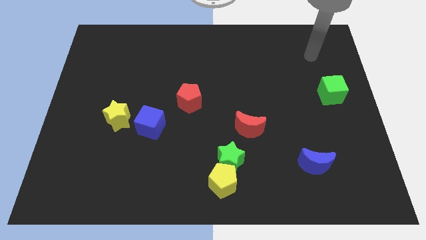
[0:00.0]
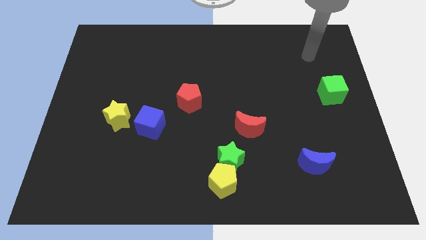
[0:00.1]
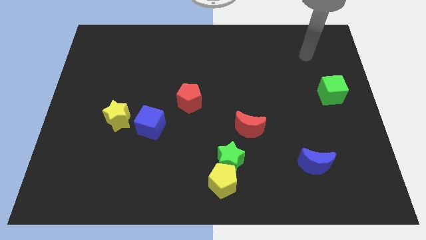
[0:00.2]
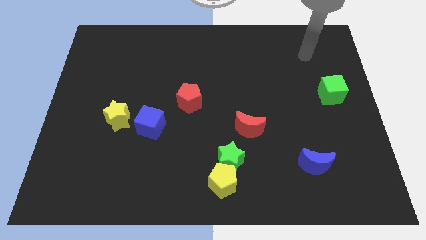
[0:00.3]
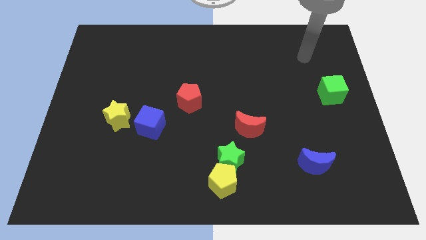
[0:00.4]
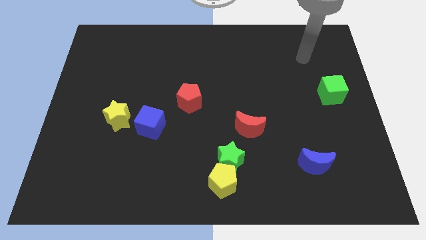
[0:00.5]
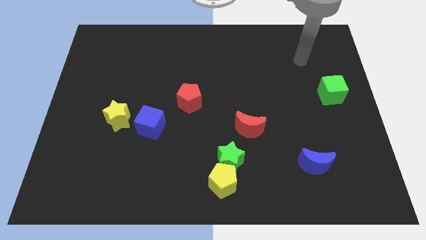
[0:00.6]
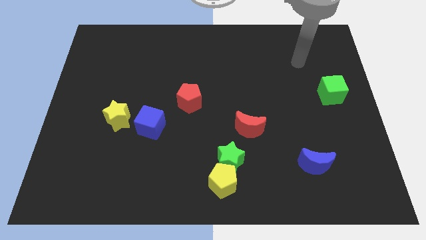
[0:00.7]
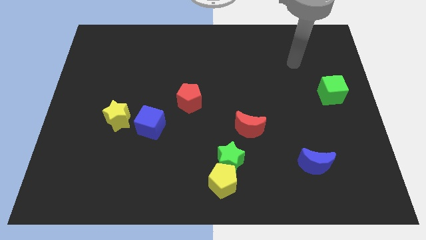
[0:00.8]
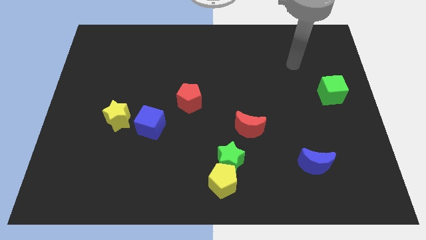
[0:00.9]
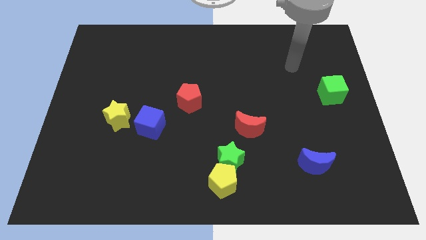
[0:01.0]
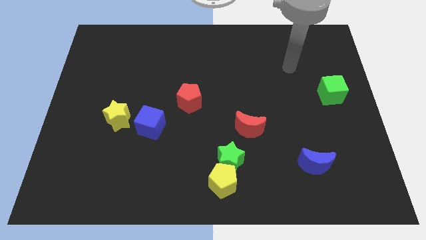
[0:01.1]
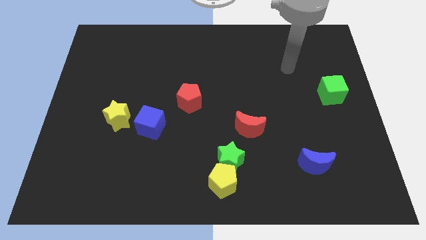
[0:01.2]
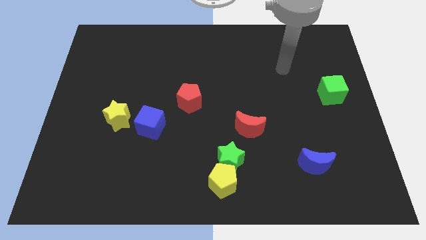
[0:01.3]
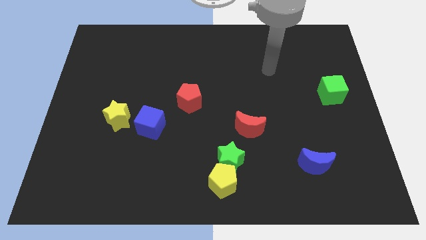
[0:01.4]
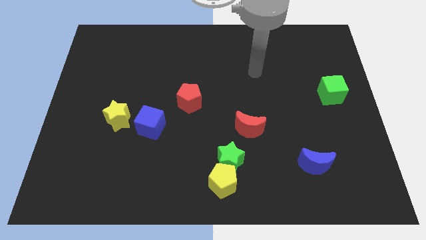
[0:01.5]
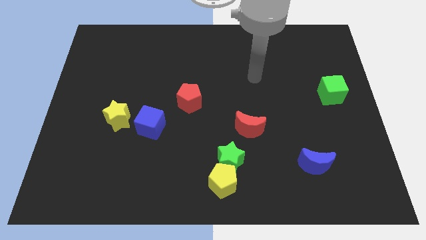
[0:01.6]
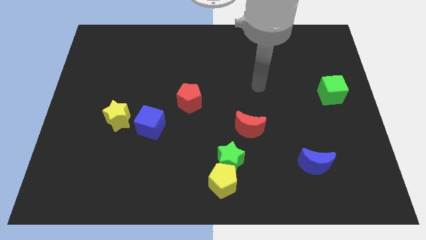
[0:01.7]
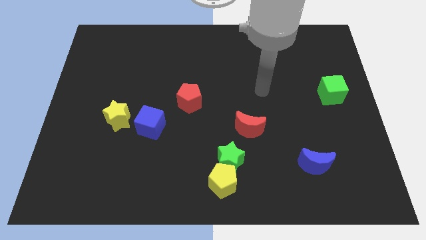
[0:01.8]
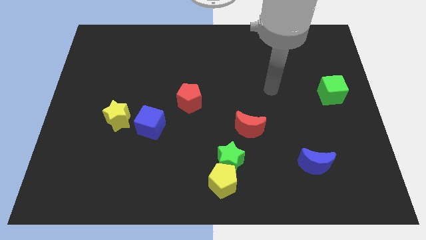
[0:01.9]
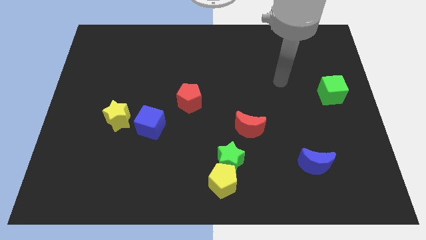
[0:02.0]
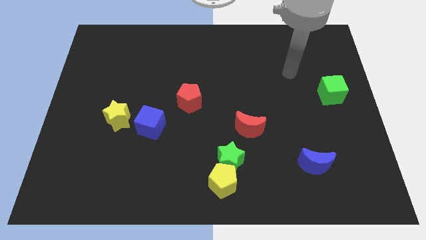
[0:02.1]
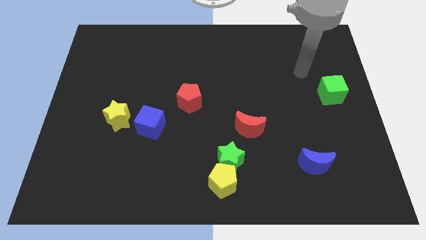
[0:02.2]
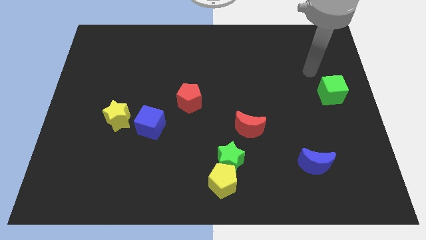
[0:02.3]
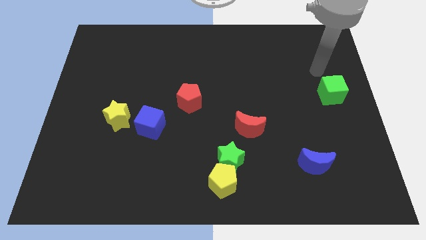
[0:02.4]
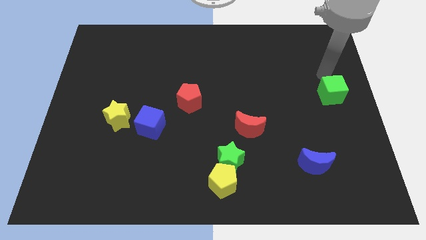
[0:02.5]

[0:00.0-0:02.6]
place your arm to the top of green cube

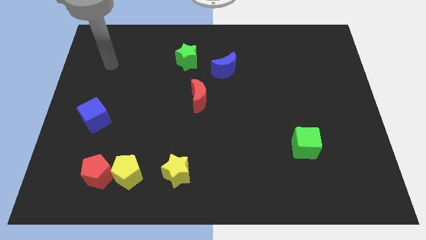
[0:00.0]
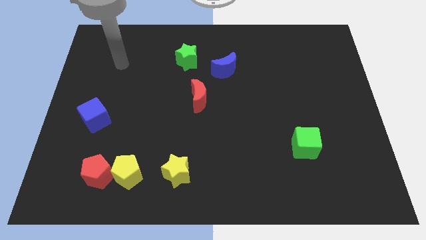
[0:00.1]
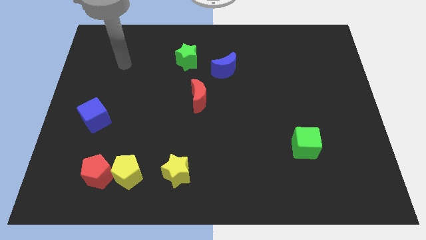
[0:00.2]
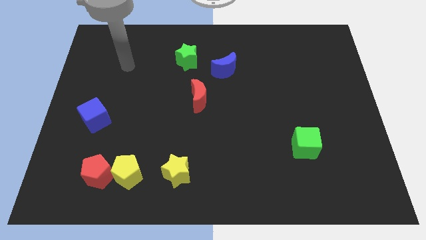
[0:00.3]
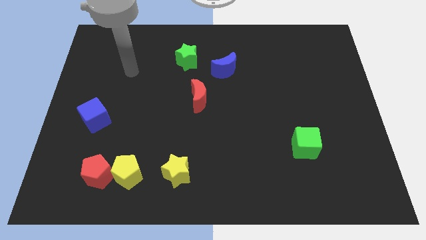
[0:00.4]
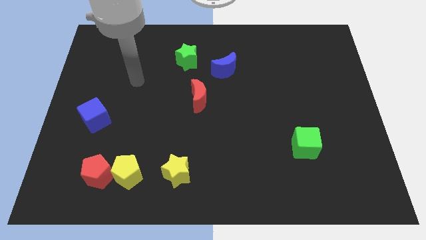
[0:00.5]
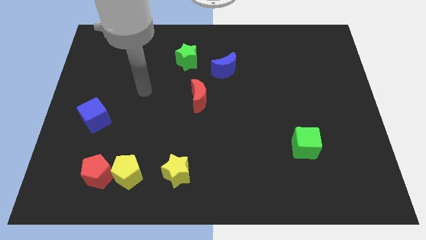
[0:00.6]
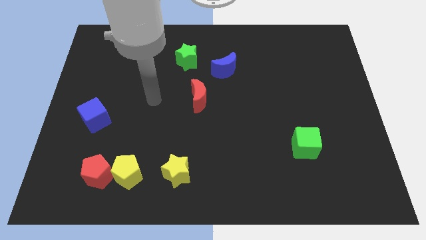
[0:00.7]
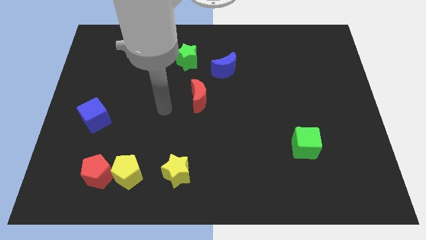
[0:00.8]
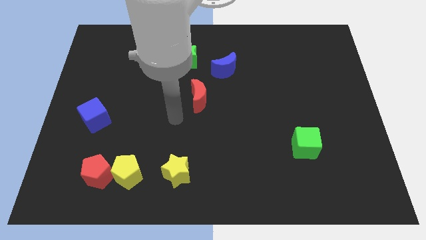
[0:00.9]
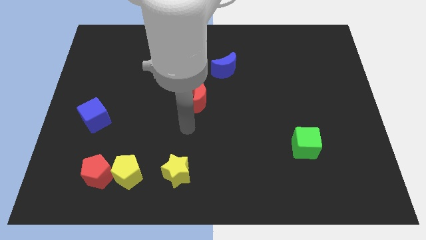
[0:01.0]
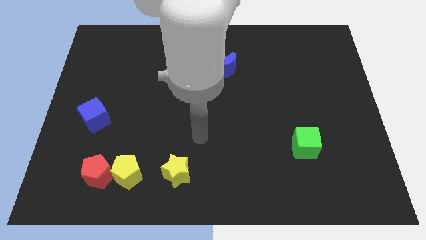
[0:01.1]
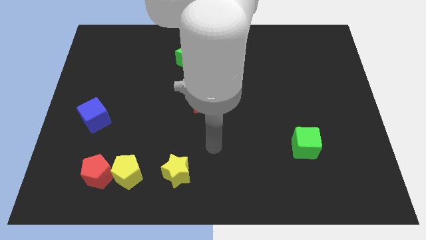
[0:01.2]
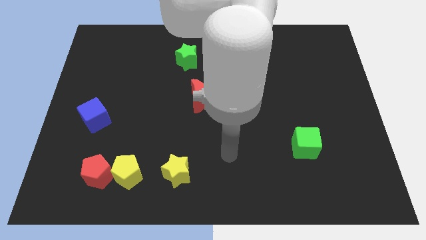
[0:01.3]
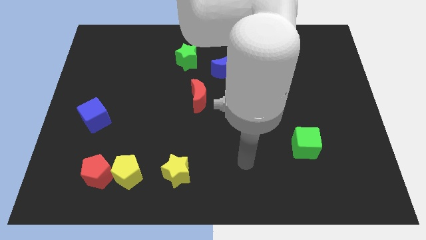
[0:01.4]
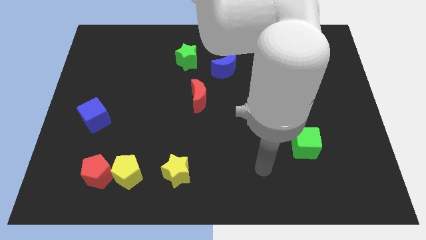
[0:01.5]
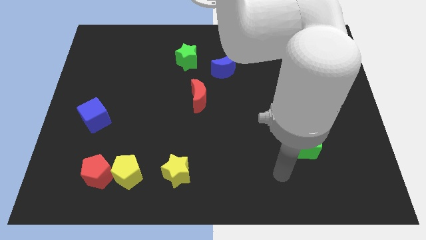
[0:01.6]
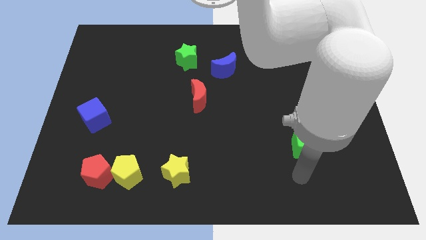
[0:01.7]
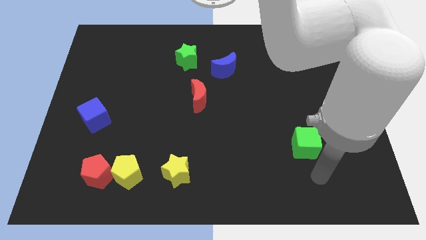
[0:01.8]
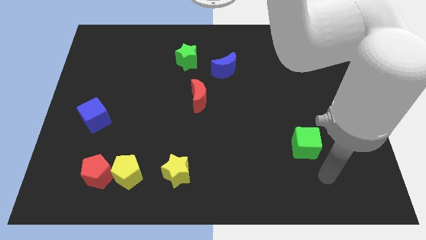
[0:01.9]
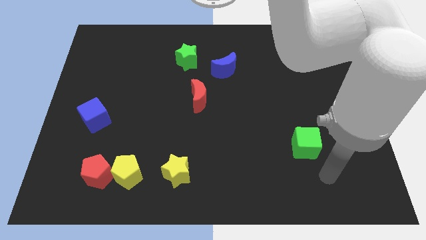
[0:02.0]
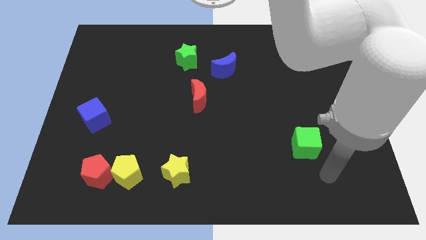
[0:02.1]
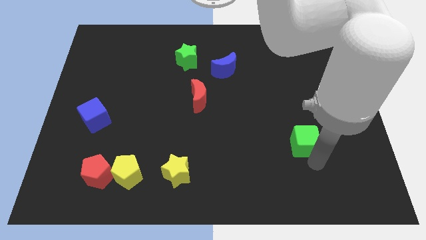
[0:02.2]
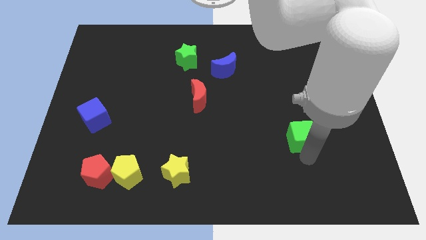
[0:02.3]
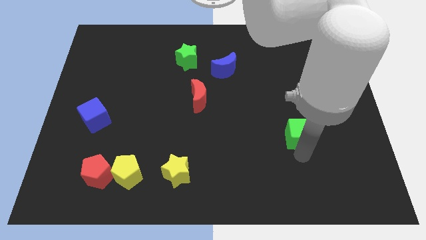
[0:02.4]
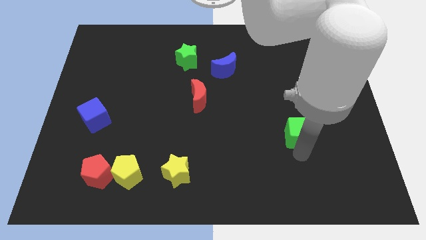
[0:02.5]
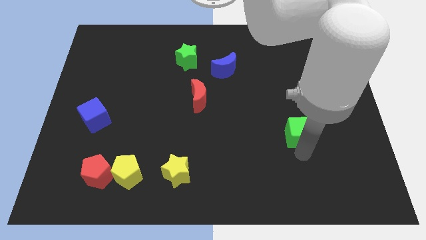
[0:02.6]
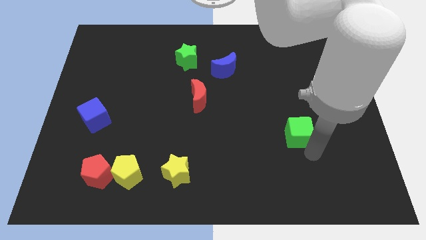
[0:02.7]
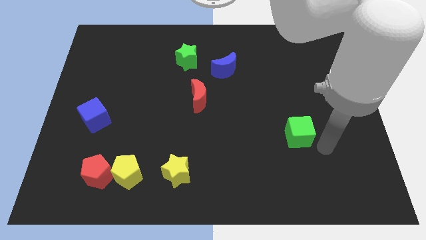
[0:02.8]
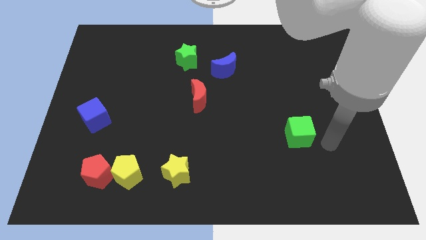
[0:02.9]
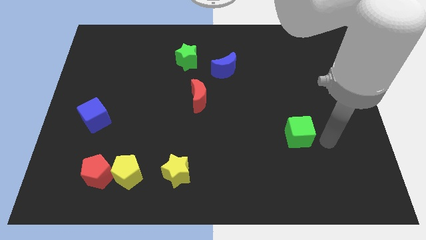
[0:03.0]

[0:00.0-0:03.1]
move green cube slightly to the top

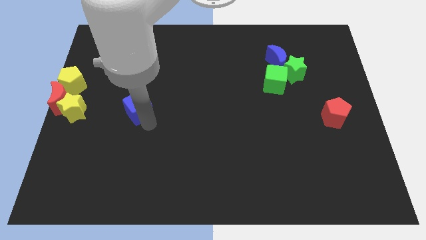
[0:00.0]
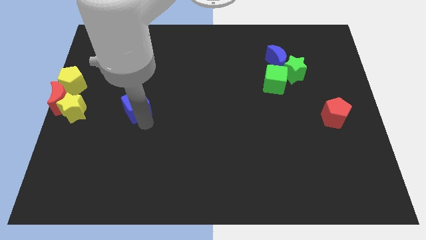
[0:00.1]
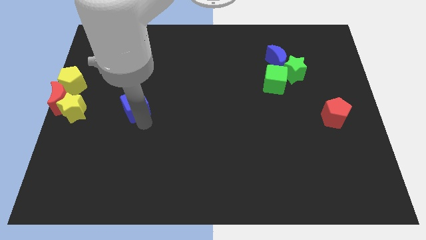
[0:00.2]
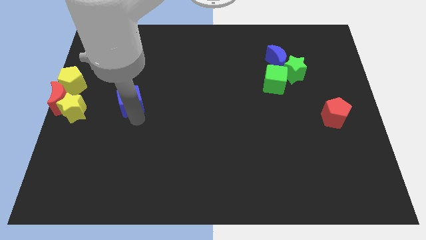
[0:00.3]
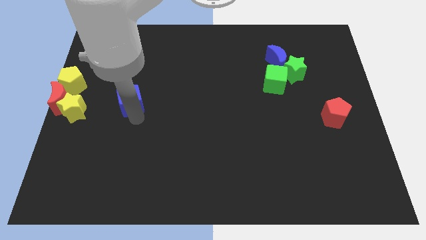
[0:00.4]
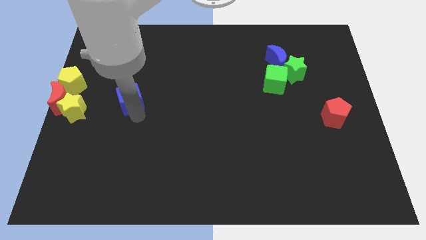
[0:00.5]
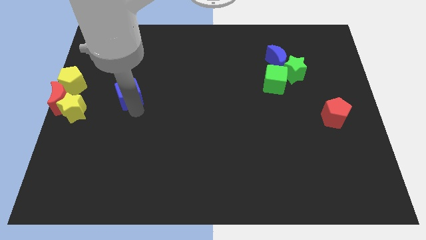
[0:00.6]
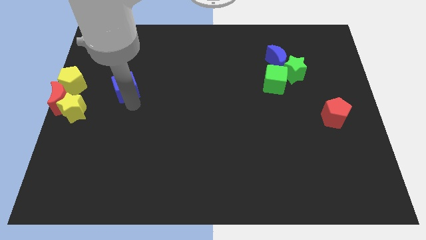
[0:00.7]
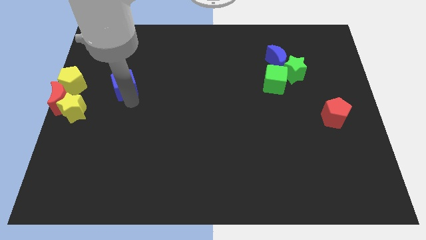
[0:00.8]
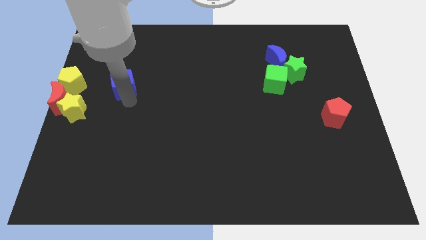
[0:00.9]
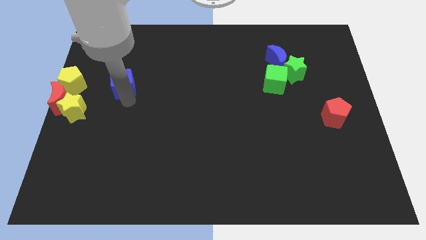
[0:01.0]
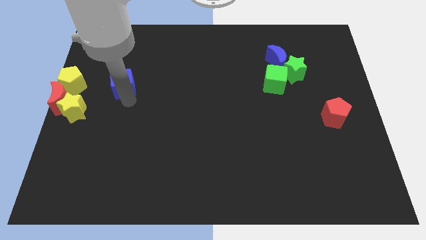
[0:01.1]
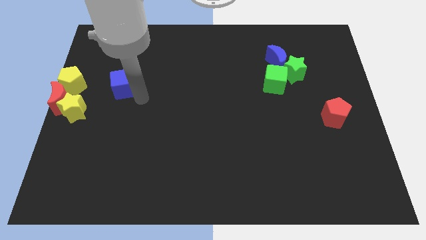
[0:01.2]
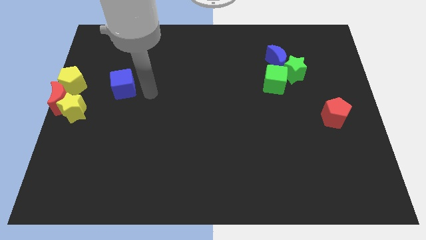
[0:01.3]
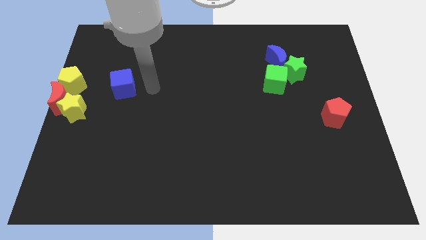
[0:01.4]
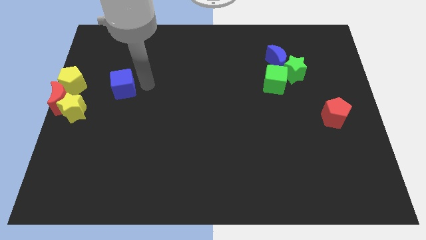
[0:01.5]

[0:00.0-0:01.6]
push blue cube to the right of the group of blocks which are at the left center

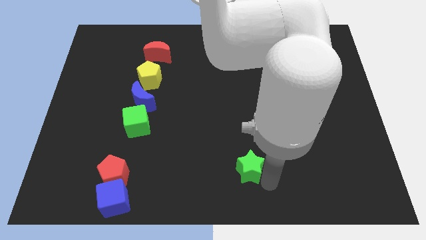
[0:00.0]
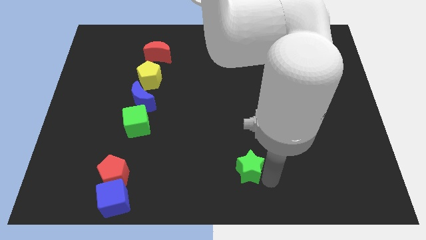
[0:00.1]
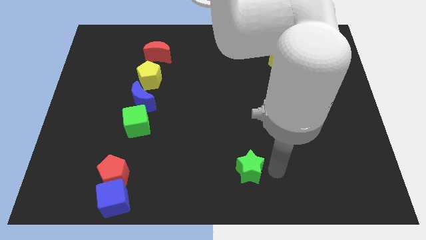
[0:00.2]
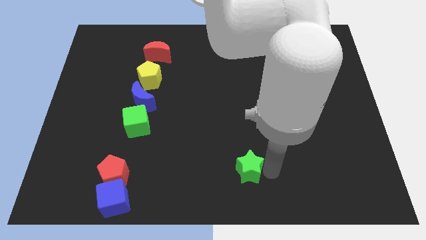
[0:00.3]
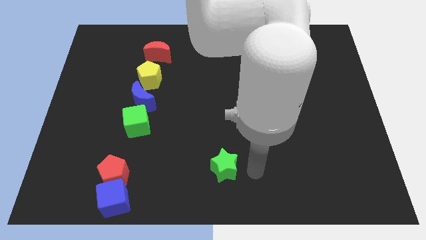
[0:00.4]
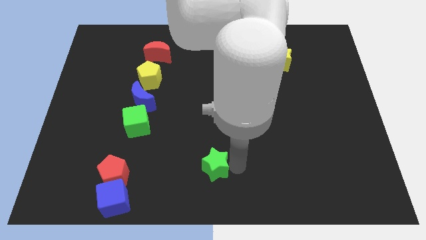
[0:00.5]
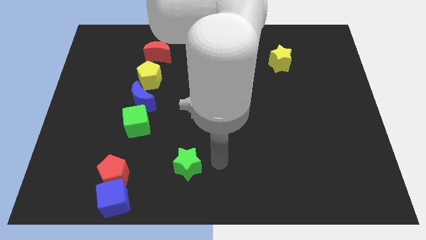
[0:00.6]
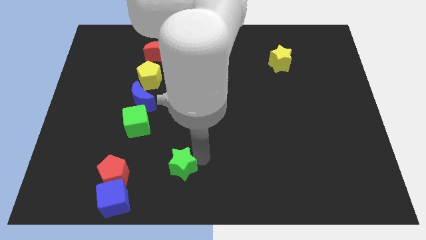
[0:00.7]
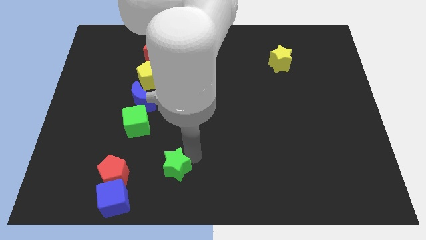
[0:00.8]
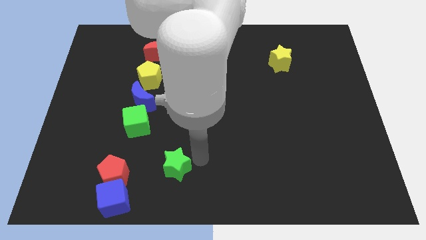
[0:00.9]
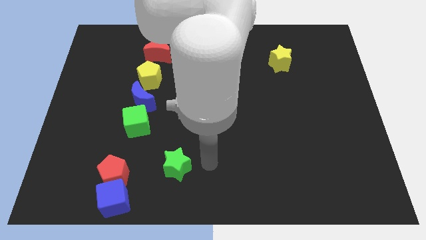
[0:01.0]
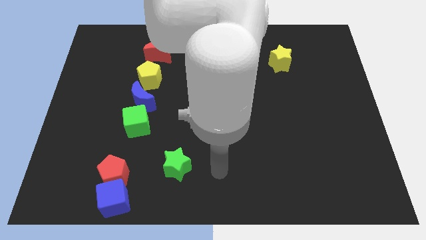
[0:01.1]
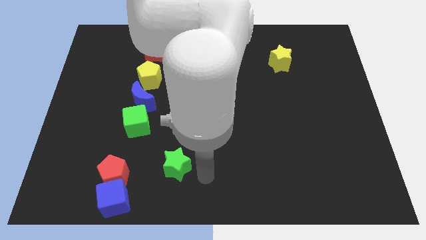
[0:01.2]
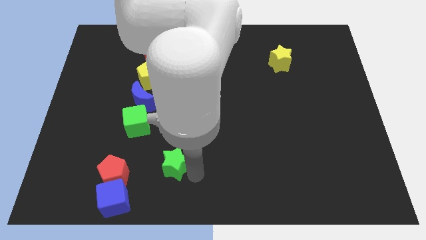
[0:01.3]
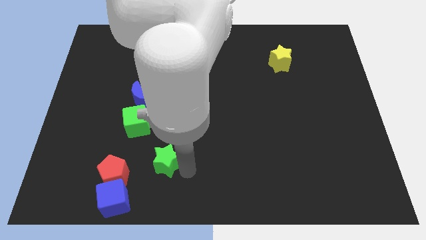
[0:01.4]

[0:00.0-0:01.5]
push the green star away from the bottom center

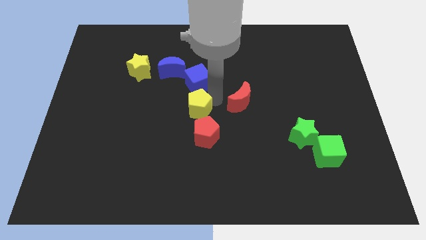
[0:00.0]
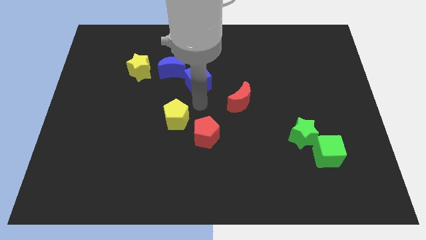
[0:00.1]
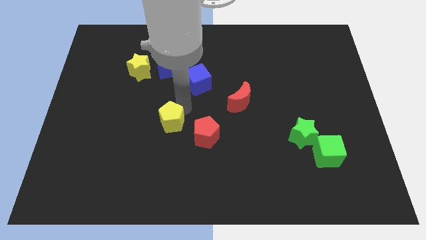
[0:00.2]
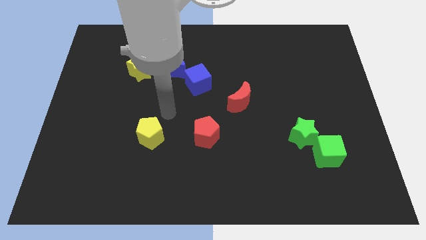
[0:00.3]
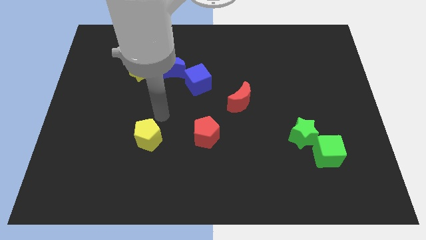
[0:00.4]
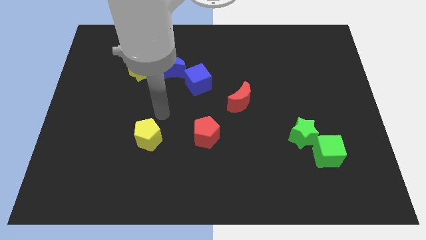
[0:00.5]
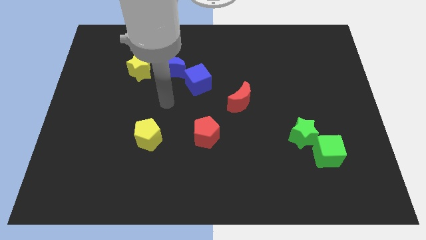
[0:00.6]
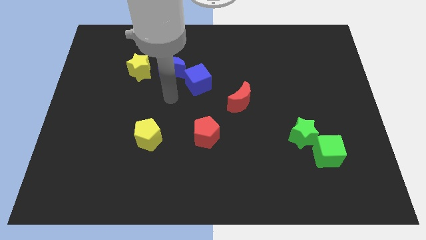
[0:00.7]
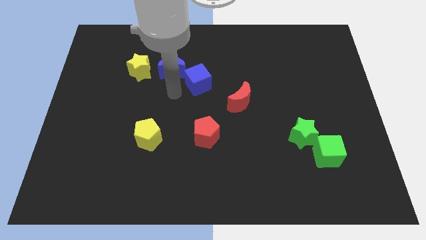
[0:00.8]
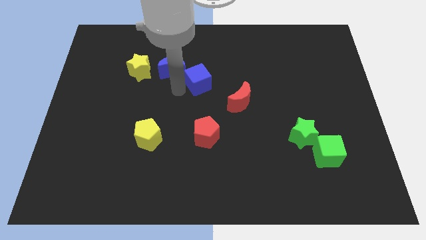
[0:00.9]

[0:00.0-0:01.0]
move the yellow pentagon to the bottom left of the board
